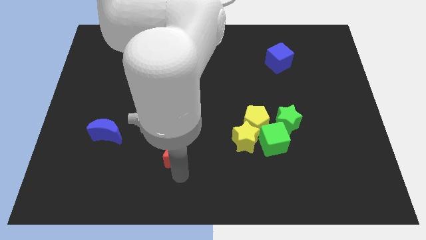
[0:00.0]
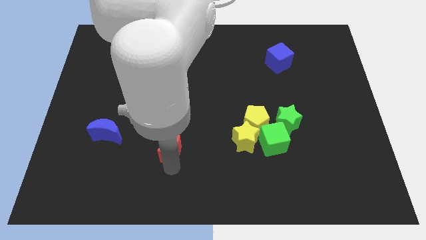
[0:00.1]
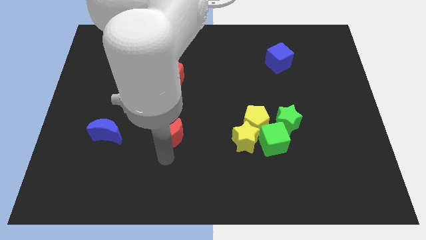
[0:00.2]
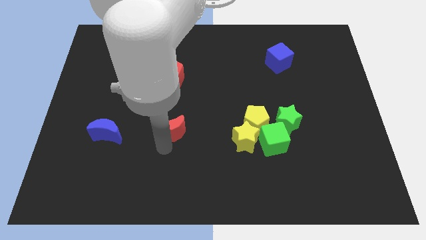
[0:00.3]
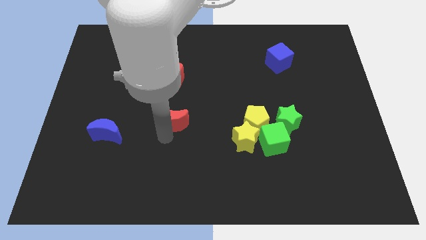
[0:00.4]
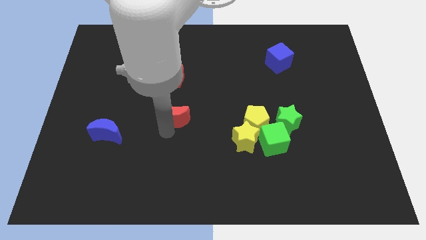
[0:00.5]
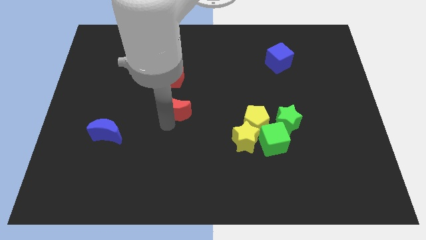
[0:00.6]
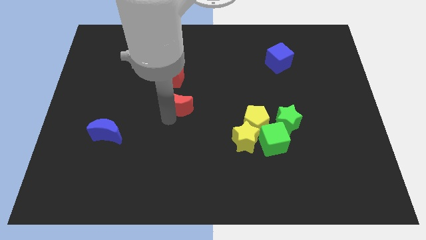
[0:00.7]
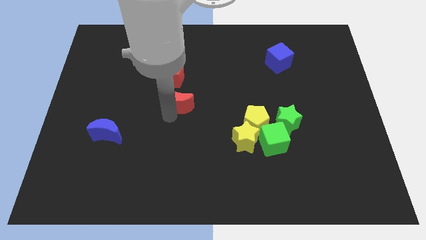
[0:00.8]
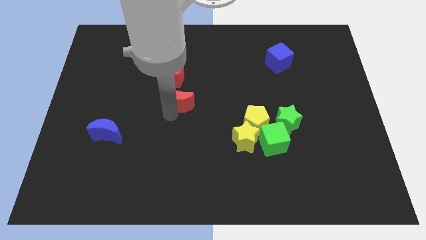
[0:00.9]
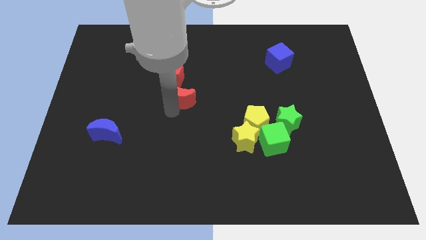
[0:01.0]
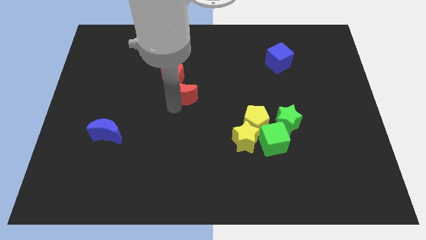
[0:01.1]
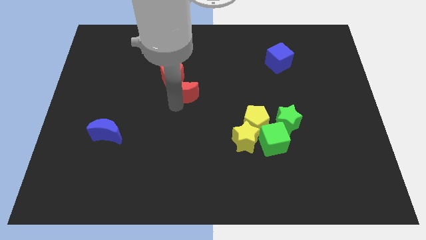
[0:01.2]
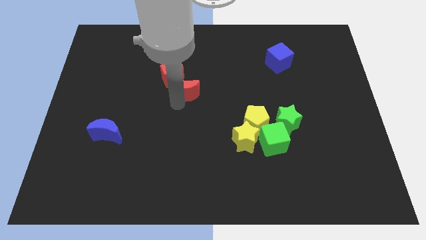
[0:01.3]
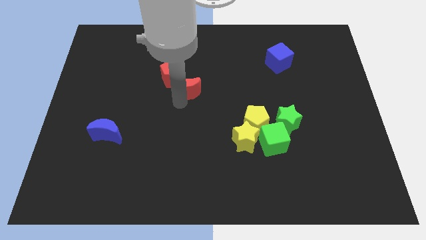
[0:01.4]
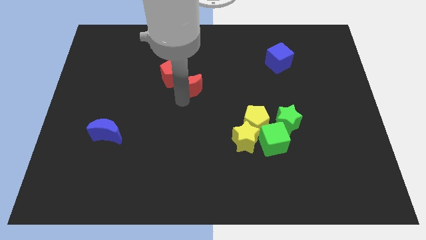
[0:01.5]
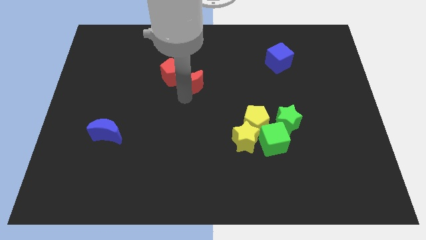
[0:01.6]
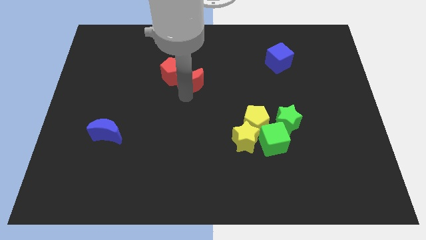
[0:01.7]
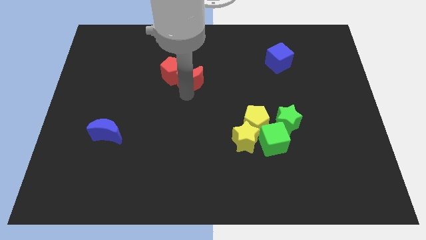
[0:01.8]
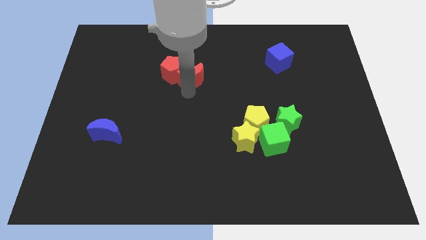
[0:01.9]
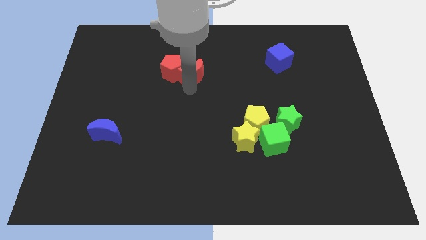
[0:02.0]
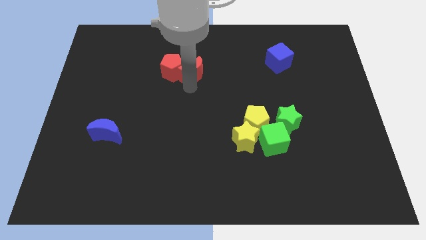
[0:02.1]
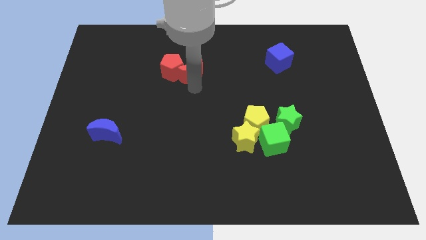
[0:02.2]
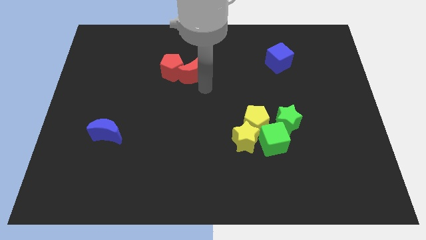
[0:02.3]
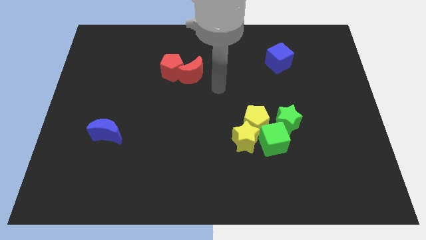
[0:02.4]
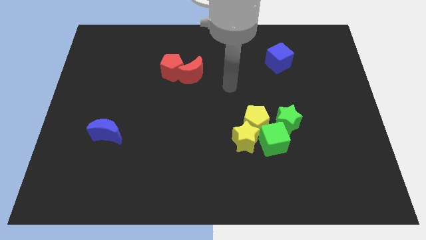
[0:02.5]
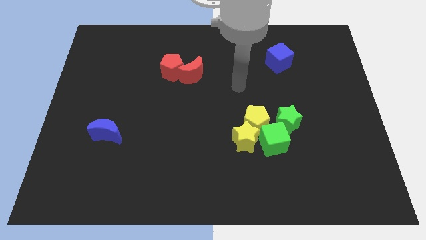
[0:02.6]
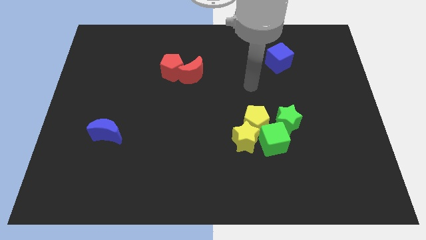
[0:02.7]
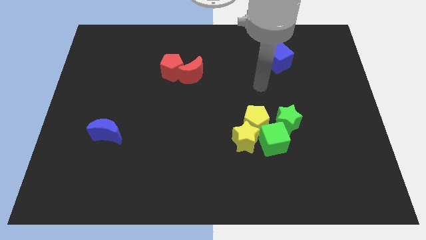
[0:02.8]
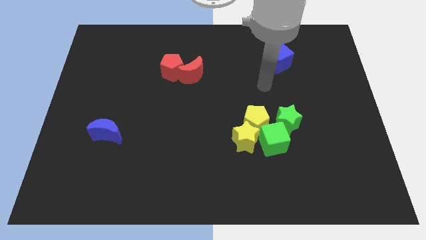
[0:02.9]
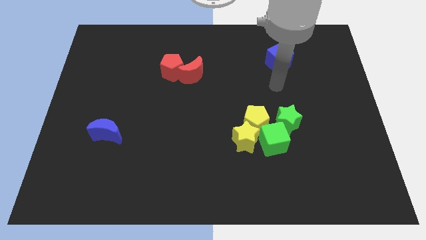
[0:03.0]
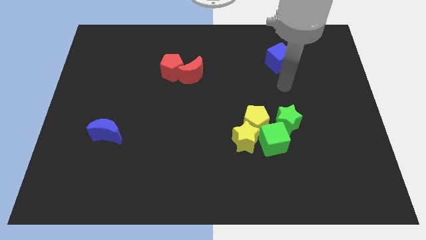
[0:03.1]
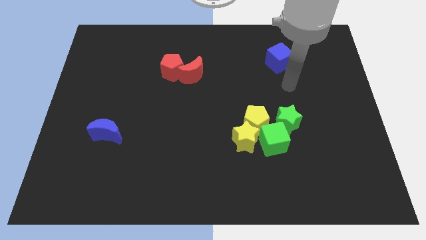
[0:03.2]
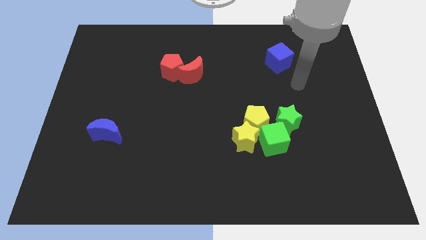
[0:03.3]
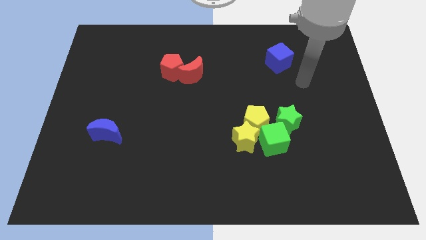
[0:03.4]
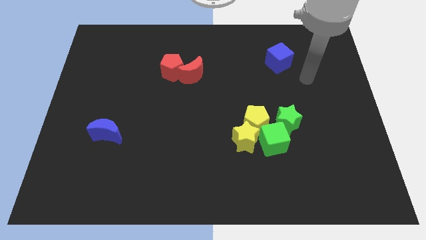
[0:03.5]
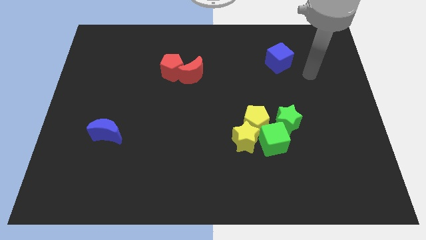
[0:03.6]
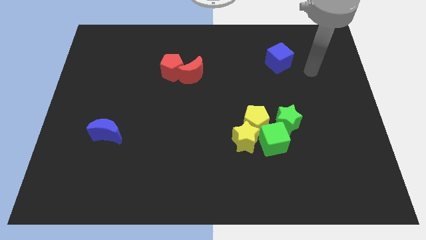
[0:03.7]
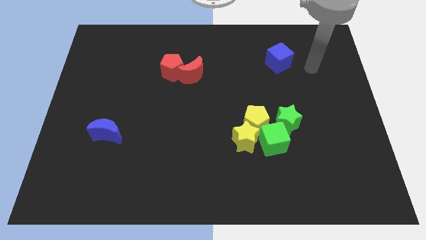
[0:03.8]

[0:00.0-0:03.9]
push the red moon into the red pentagon

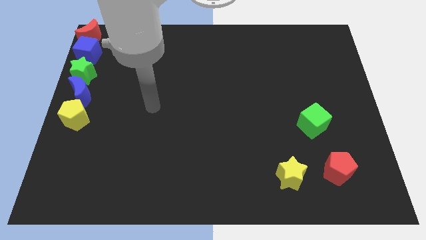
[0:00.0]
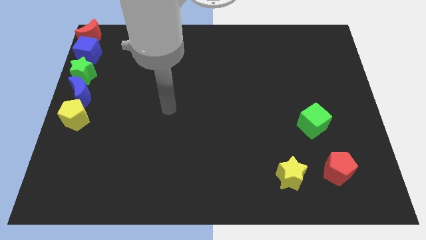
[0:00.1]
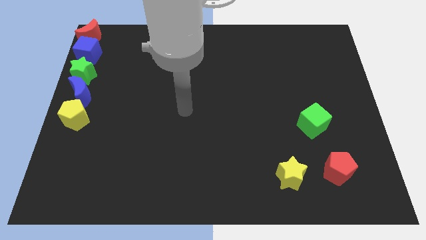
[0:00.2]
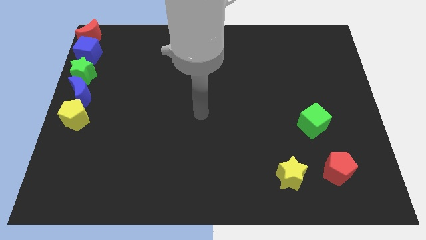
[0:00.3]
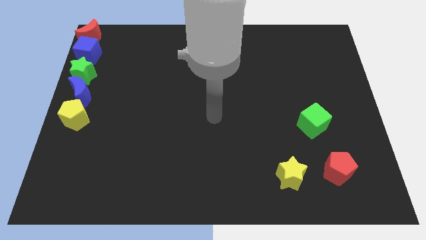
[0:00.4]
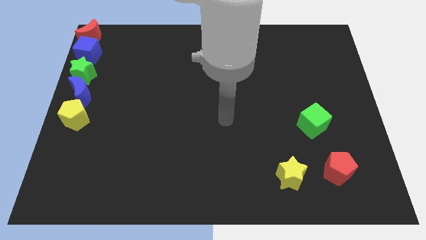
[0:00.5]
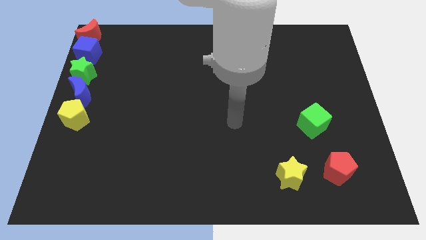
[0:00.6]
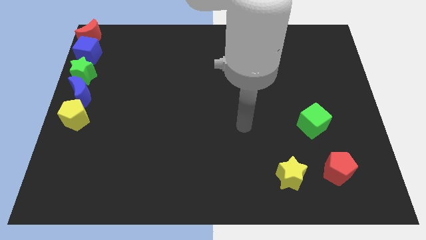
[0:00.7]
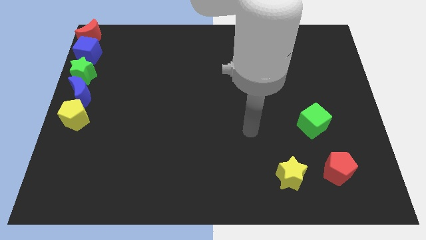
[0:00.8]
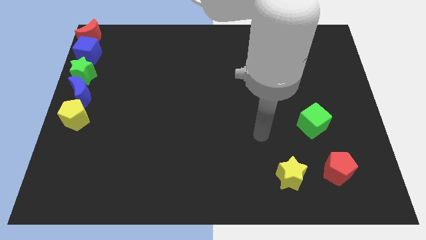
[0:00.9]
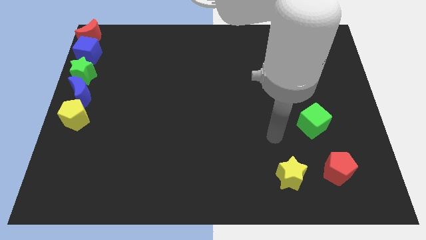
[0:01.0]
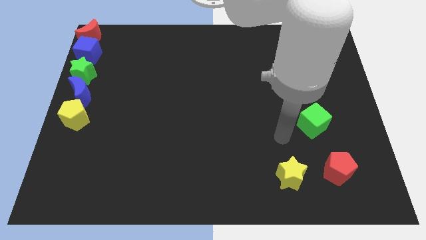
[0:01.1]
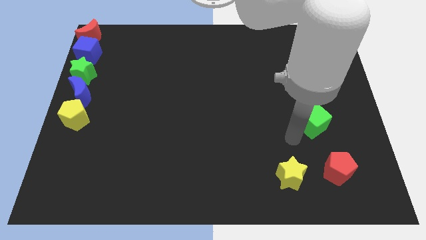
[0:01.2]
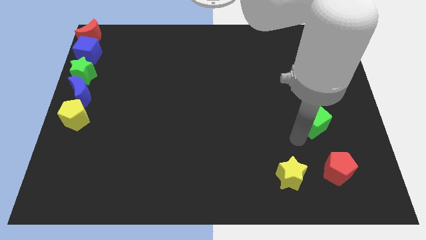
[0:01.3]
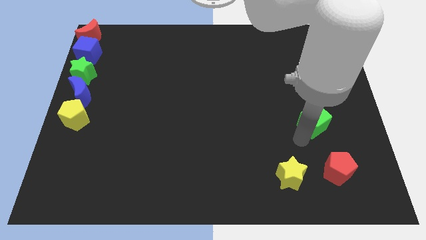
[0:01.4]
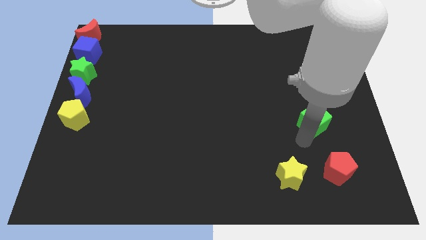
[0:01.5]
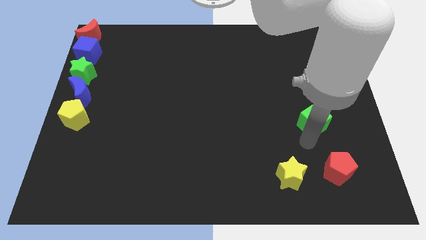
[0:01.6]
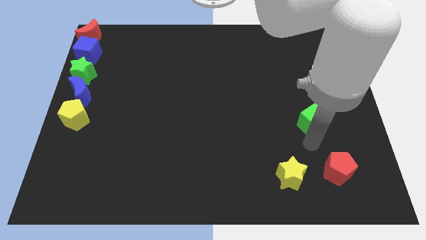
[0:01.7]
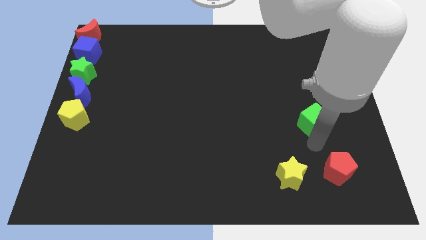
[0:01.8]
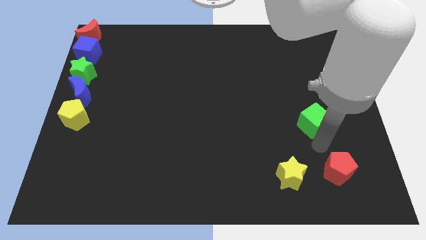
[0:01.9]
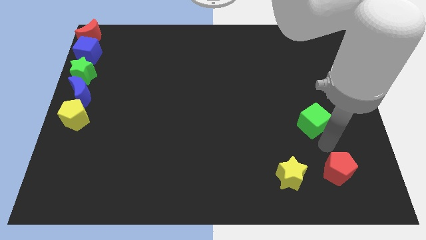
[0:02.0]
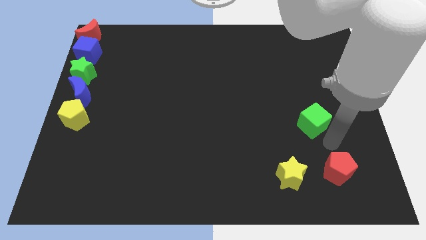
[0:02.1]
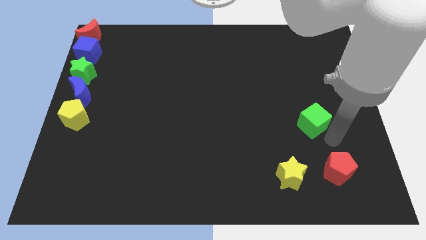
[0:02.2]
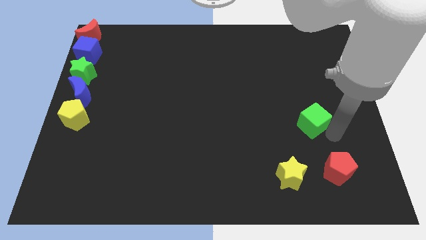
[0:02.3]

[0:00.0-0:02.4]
move your arm to the bottom of the green cube

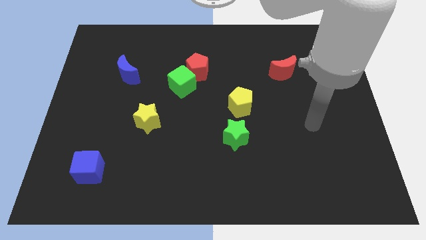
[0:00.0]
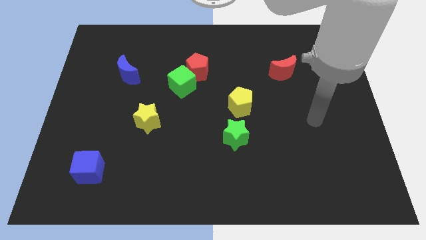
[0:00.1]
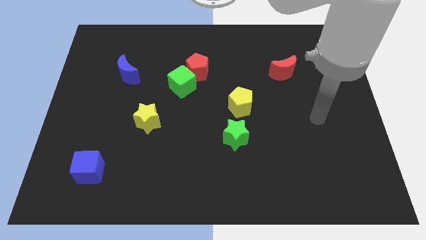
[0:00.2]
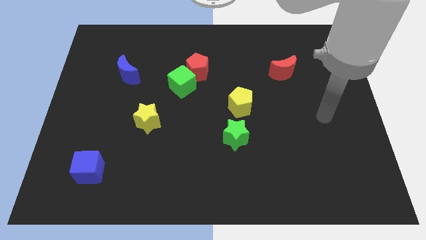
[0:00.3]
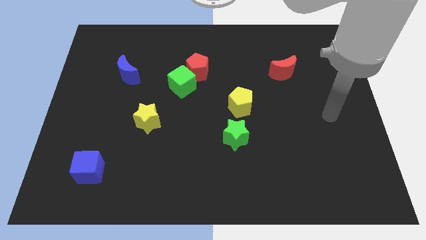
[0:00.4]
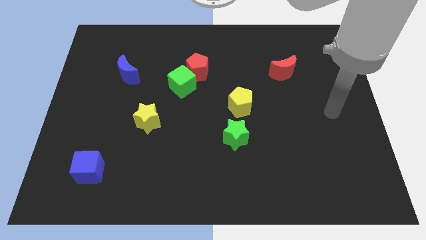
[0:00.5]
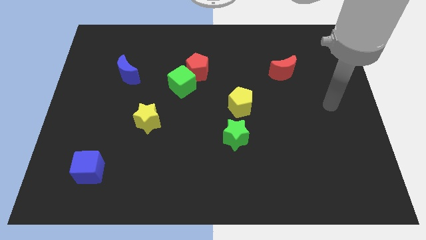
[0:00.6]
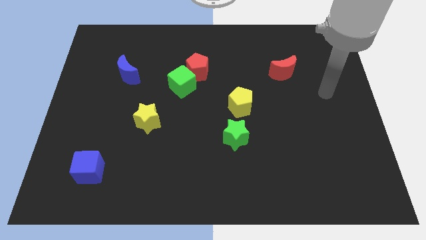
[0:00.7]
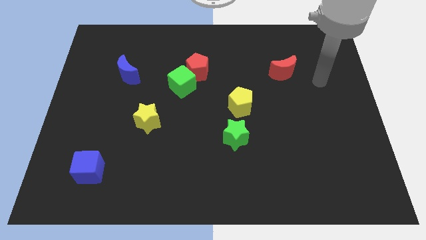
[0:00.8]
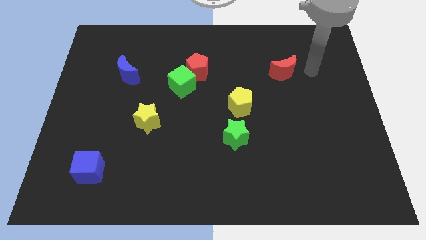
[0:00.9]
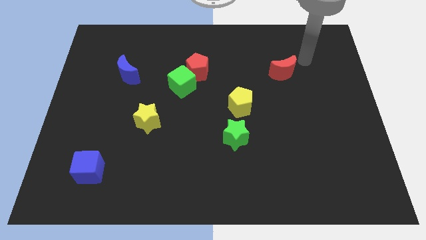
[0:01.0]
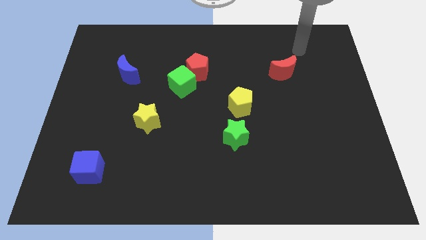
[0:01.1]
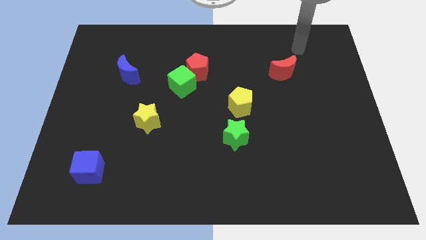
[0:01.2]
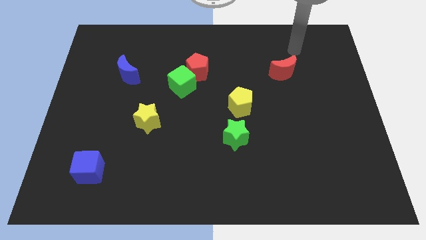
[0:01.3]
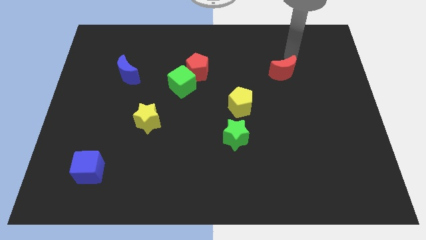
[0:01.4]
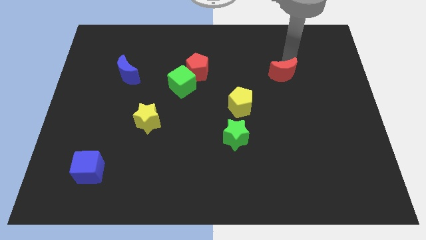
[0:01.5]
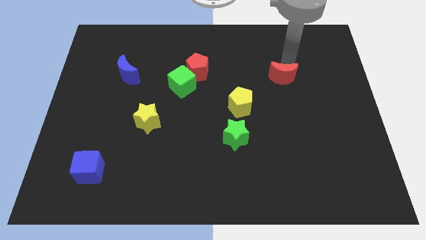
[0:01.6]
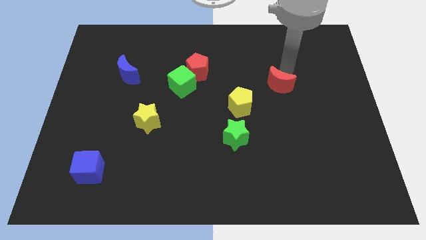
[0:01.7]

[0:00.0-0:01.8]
place your arm to the top of the red crescent

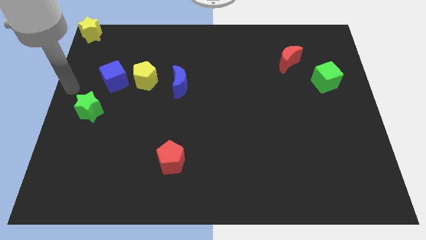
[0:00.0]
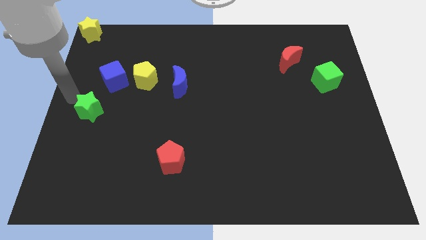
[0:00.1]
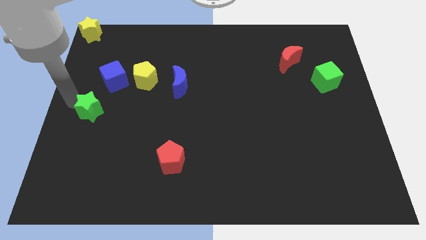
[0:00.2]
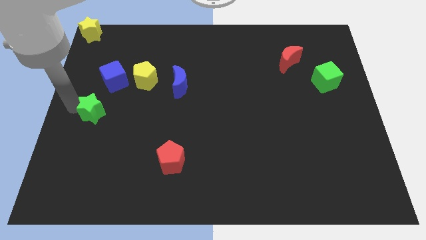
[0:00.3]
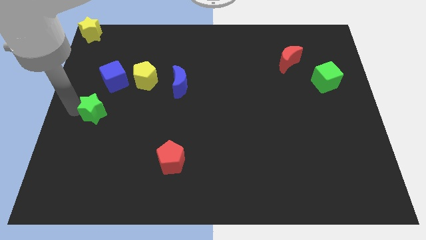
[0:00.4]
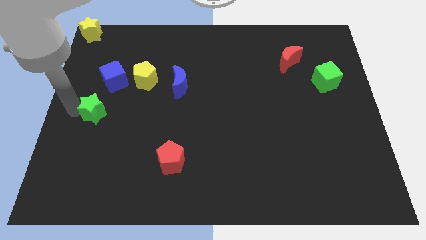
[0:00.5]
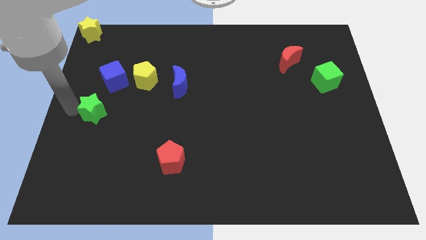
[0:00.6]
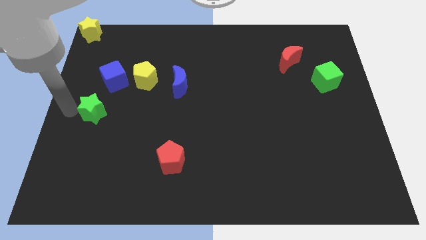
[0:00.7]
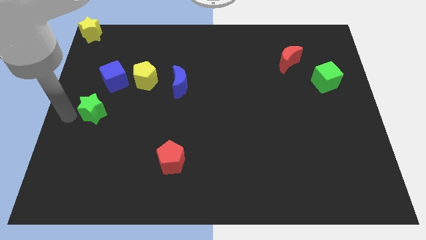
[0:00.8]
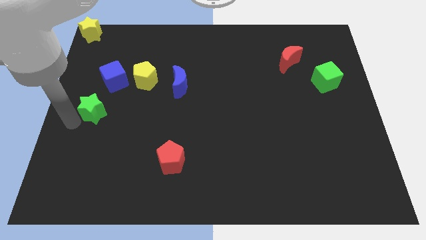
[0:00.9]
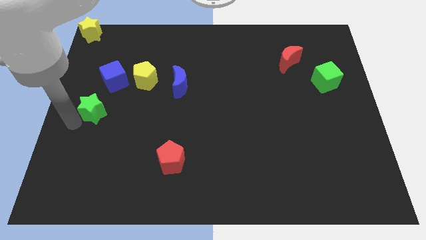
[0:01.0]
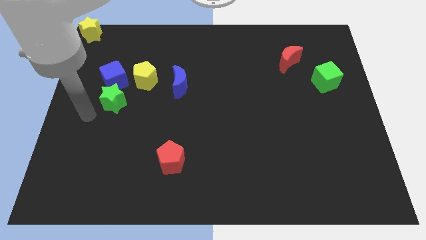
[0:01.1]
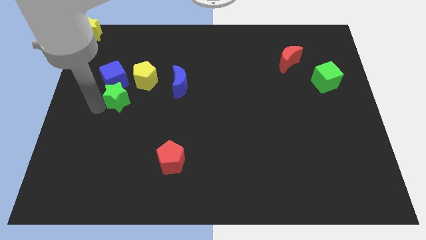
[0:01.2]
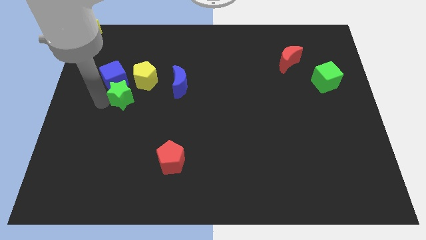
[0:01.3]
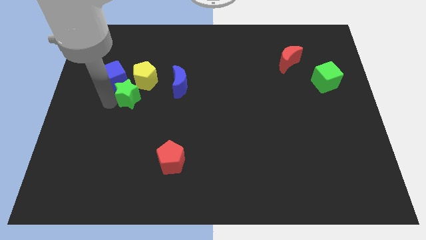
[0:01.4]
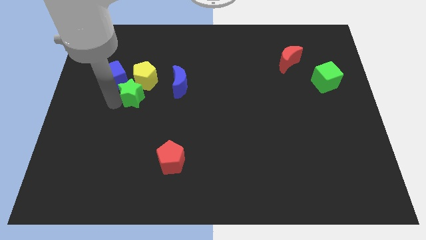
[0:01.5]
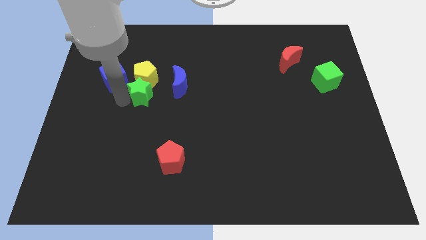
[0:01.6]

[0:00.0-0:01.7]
move the green star into the yellow pentagon
